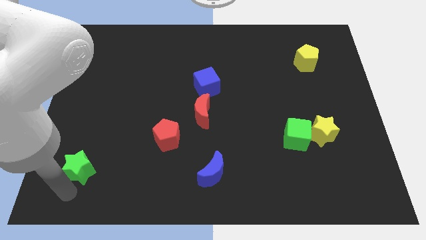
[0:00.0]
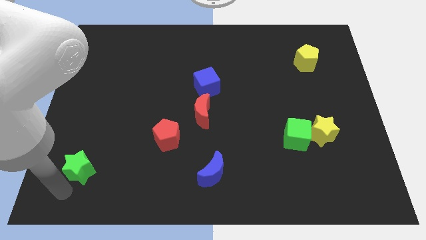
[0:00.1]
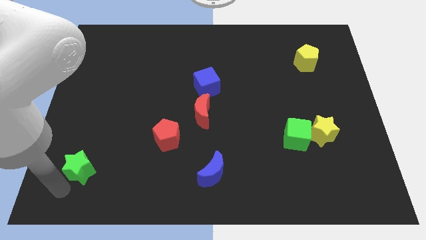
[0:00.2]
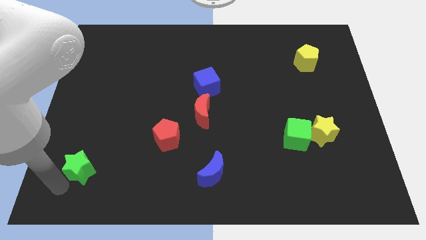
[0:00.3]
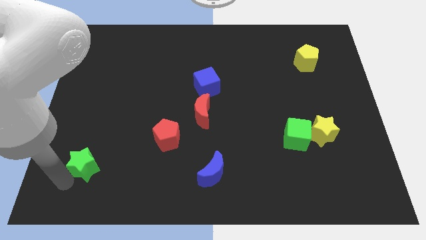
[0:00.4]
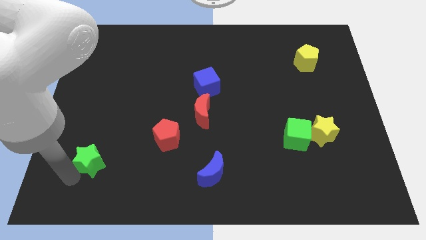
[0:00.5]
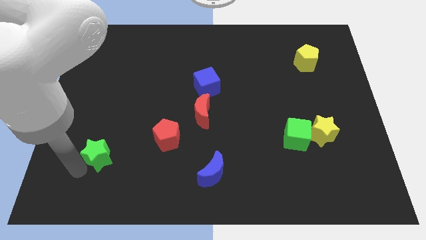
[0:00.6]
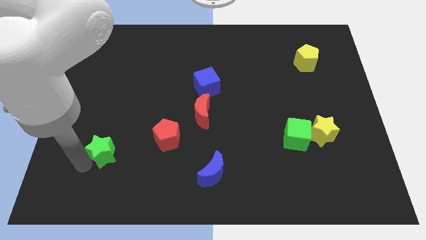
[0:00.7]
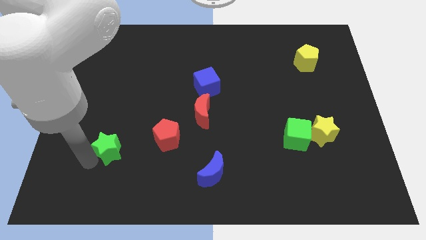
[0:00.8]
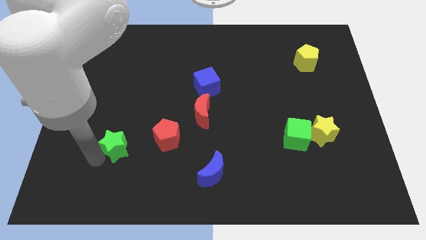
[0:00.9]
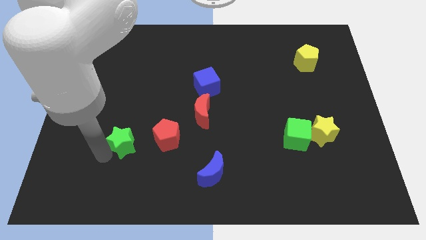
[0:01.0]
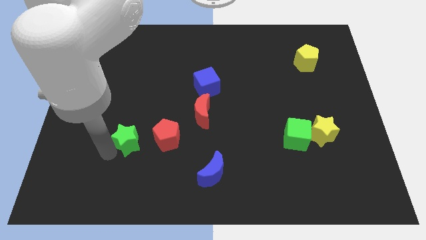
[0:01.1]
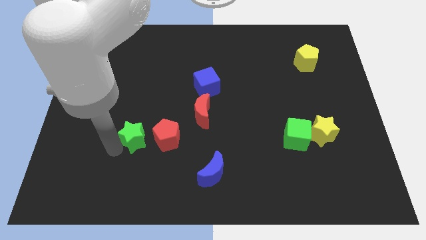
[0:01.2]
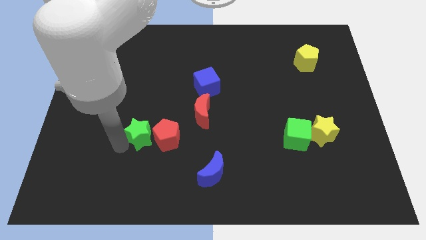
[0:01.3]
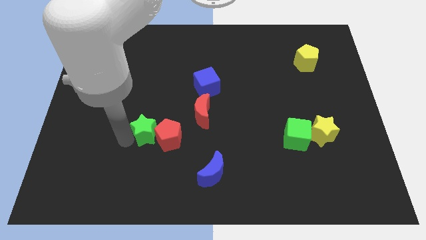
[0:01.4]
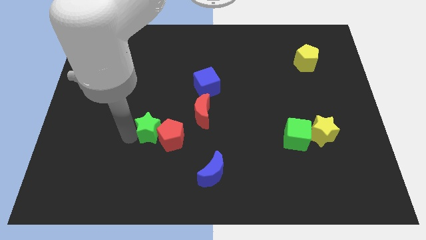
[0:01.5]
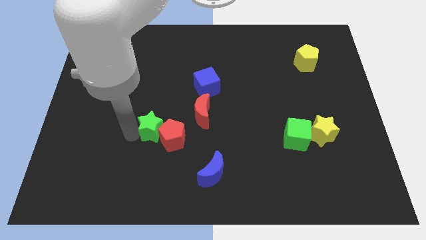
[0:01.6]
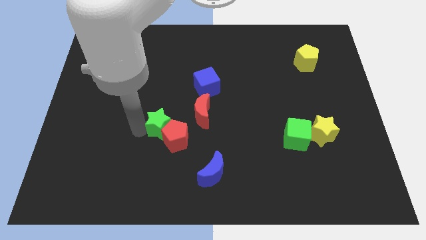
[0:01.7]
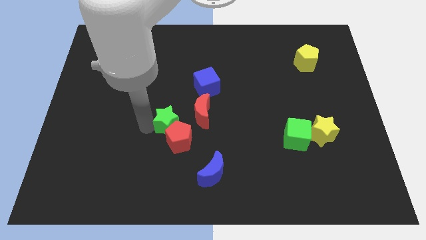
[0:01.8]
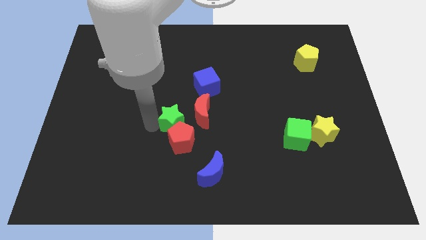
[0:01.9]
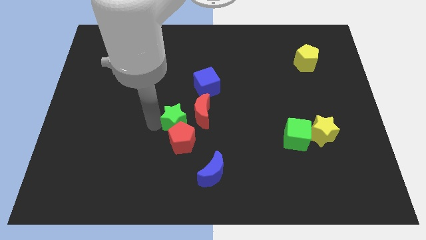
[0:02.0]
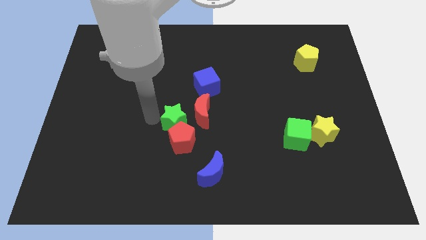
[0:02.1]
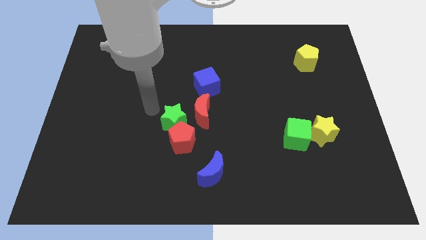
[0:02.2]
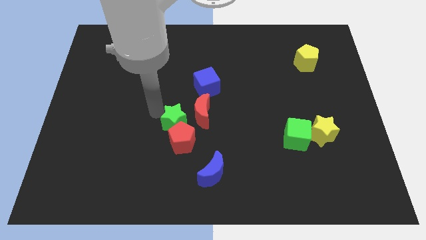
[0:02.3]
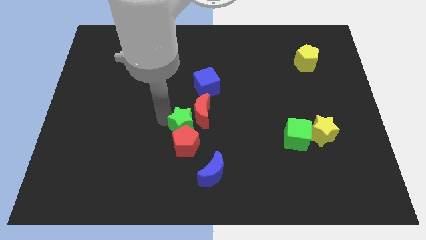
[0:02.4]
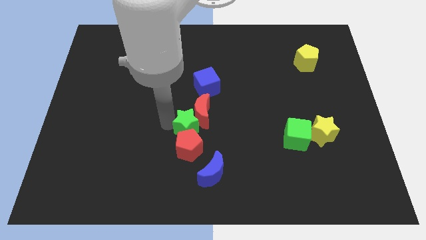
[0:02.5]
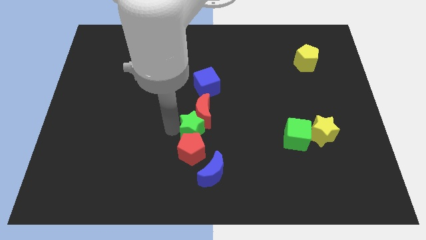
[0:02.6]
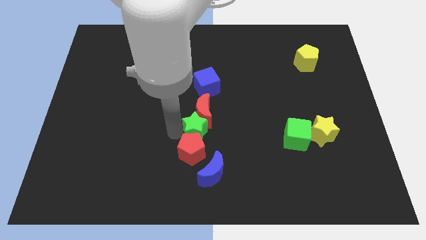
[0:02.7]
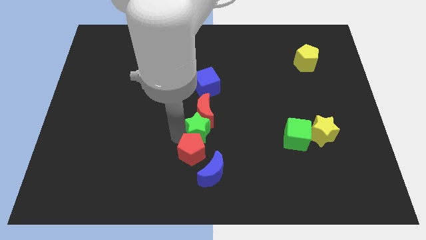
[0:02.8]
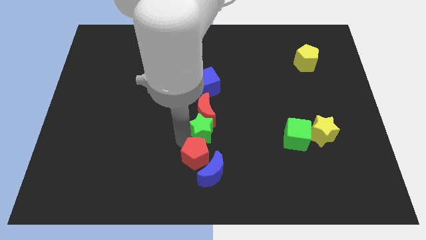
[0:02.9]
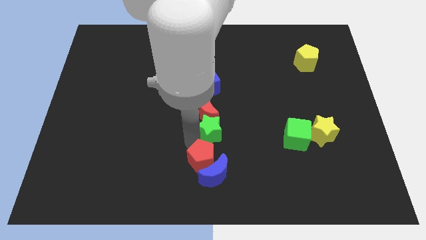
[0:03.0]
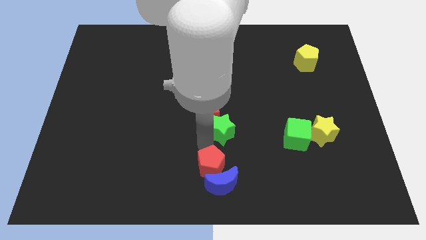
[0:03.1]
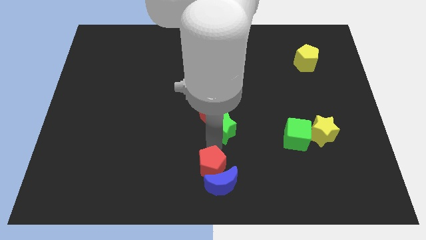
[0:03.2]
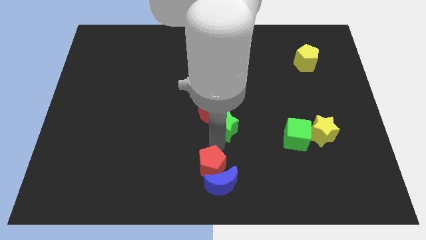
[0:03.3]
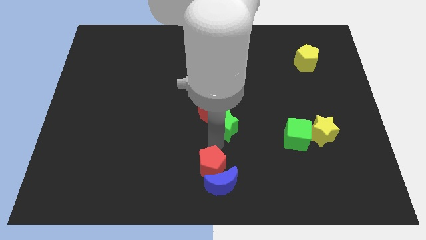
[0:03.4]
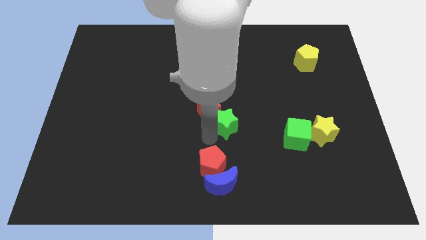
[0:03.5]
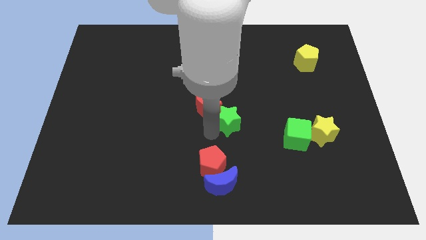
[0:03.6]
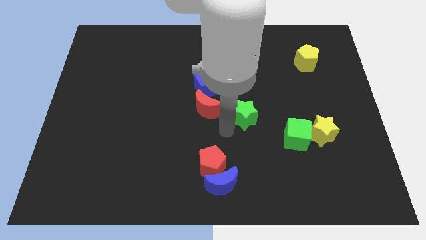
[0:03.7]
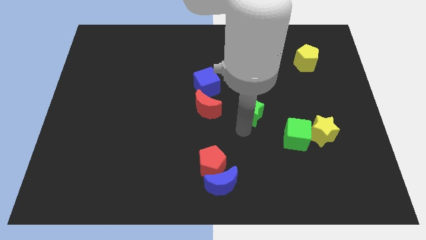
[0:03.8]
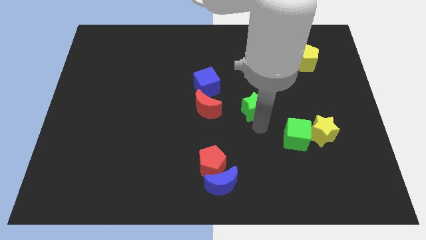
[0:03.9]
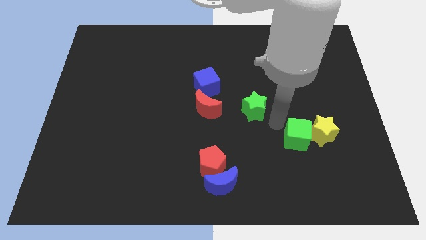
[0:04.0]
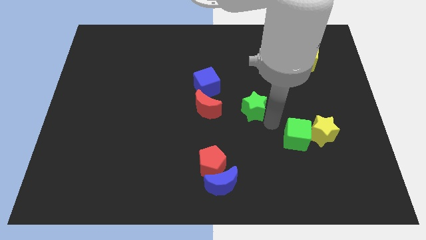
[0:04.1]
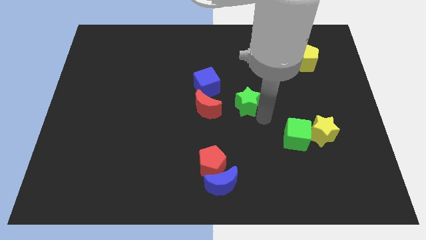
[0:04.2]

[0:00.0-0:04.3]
move the green star to the right of the red crescent

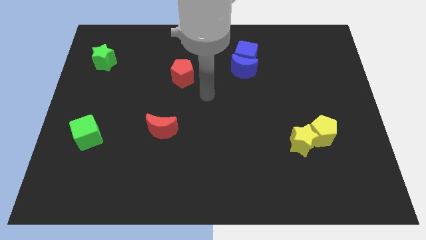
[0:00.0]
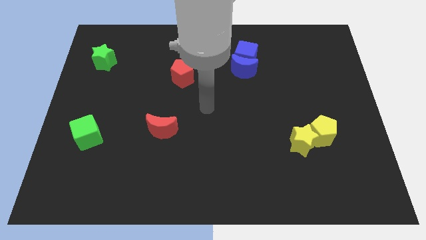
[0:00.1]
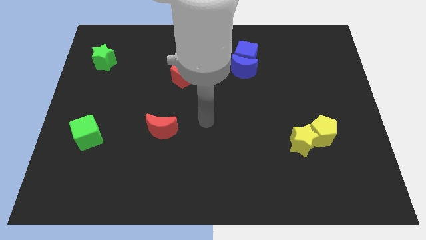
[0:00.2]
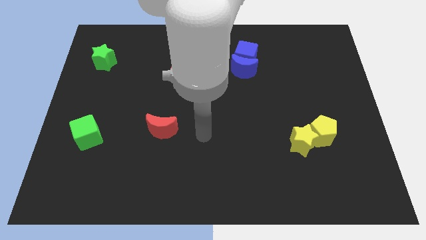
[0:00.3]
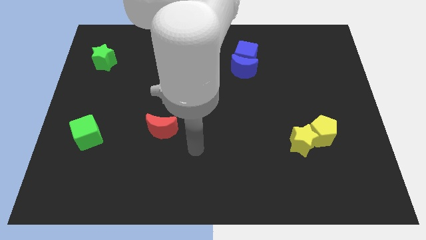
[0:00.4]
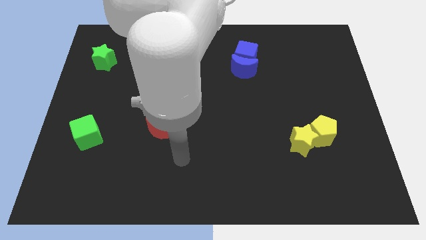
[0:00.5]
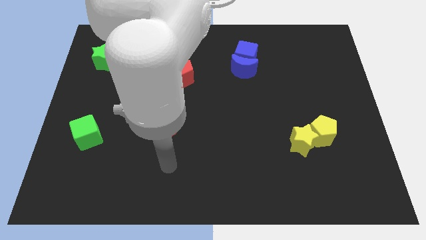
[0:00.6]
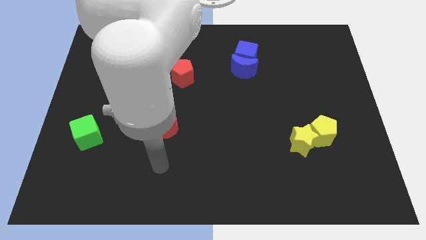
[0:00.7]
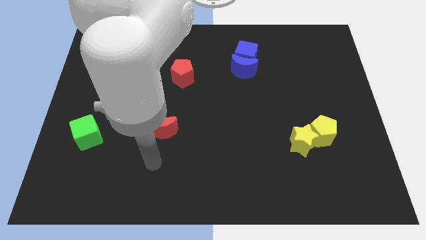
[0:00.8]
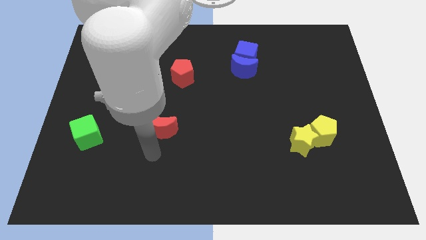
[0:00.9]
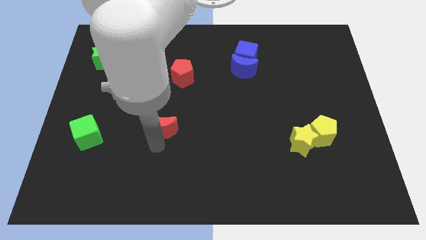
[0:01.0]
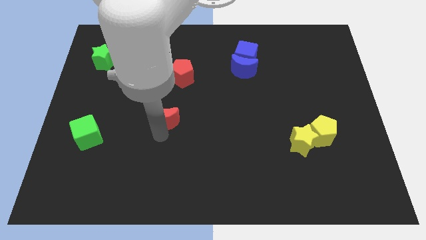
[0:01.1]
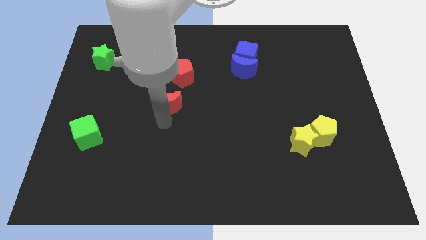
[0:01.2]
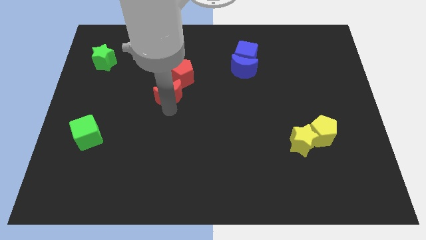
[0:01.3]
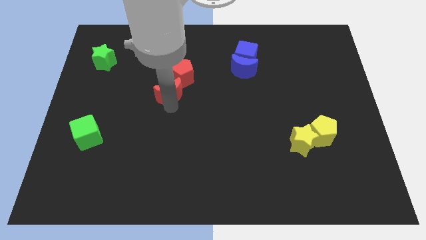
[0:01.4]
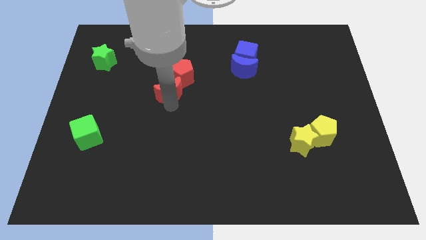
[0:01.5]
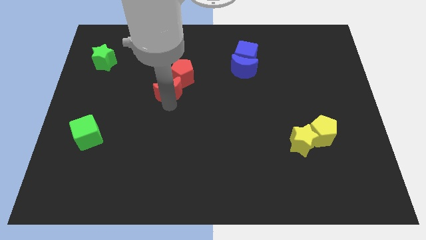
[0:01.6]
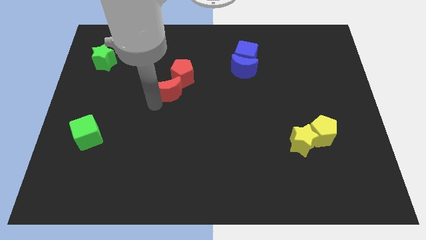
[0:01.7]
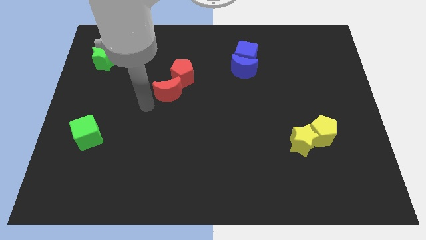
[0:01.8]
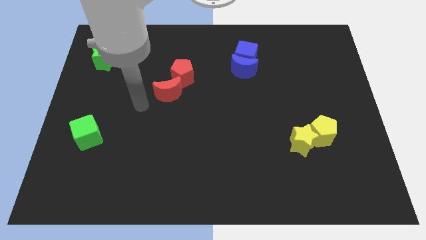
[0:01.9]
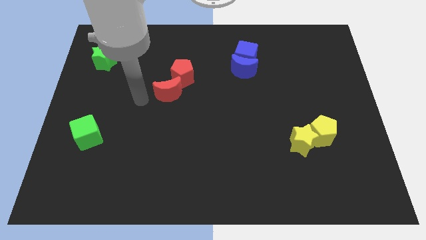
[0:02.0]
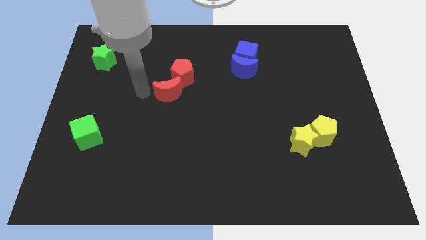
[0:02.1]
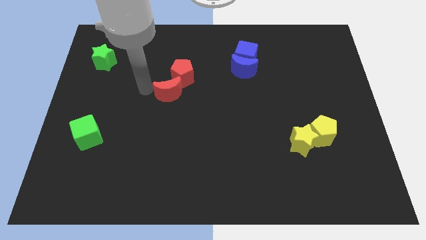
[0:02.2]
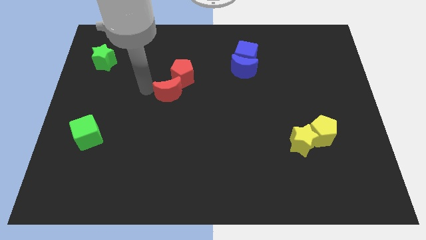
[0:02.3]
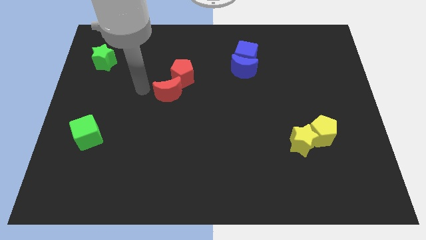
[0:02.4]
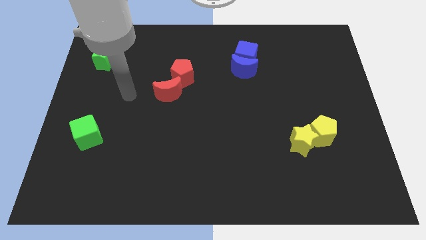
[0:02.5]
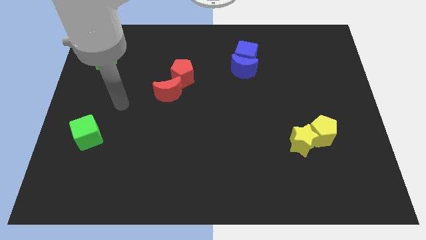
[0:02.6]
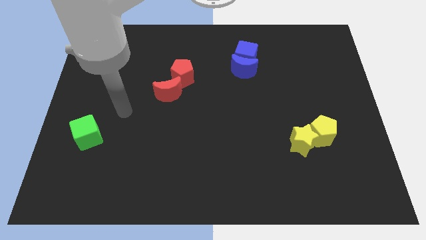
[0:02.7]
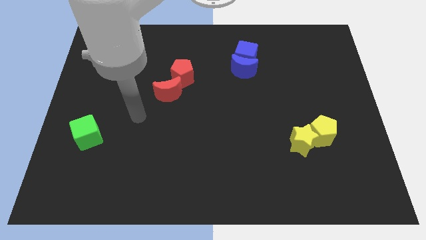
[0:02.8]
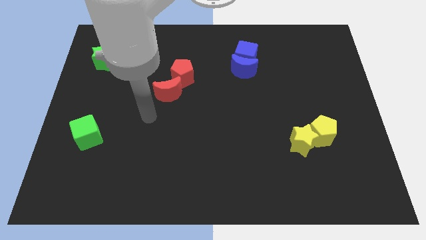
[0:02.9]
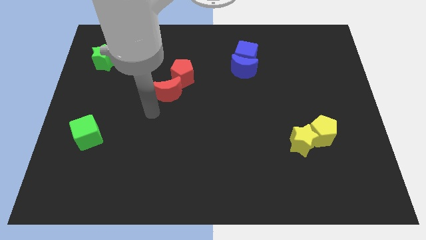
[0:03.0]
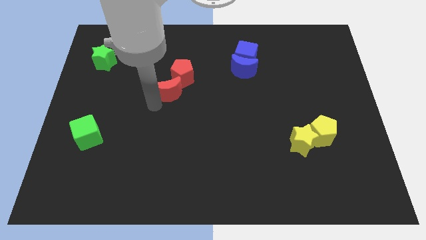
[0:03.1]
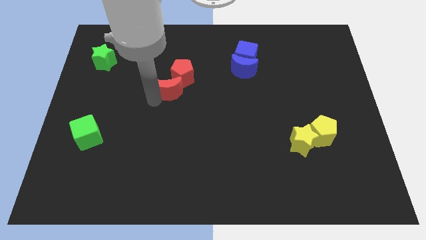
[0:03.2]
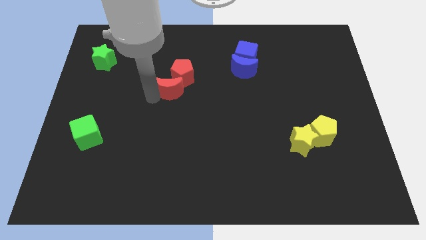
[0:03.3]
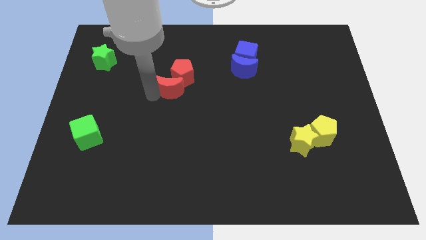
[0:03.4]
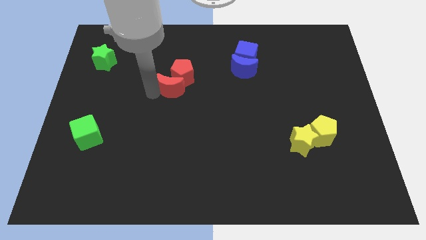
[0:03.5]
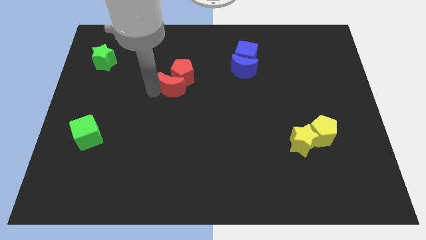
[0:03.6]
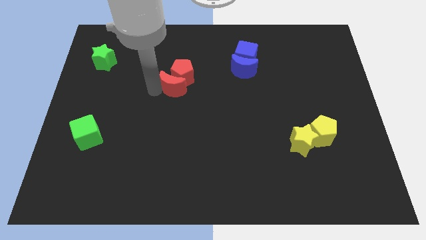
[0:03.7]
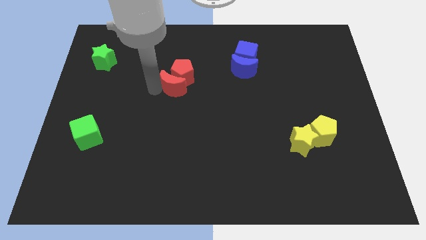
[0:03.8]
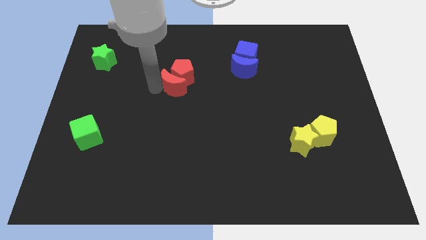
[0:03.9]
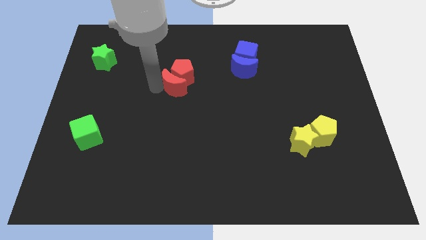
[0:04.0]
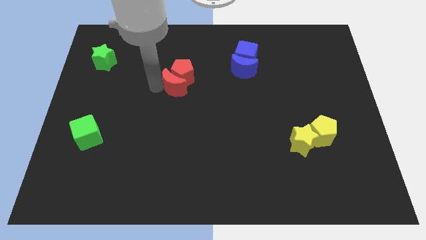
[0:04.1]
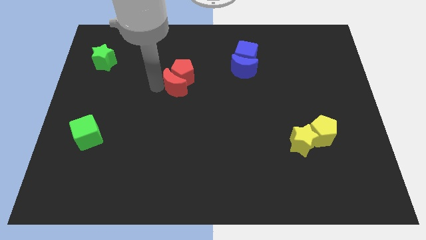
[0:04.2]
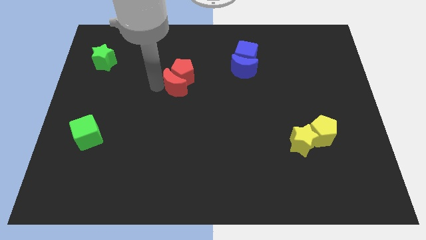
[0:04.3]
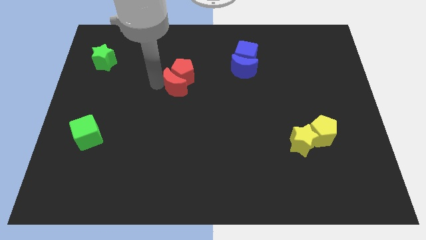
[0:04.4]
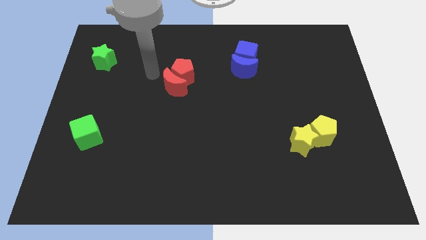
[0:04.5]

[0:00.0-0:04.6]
move the red moon into red pentagon
